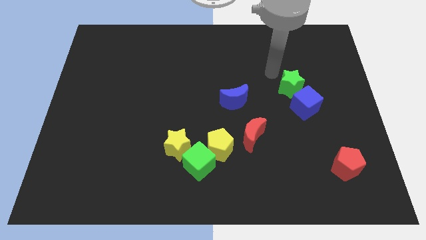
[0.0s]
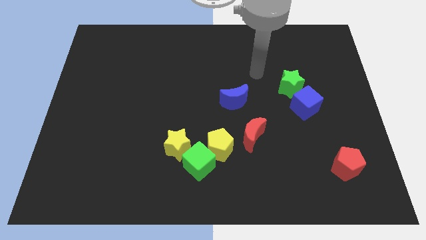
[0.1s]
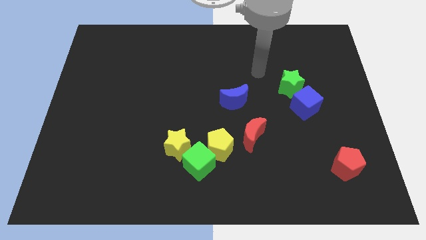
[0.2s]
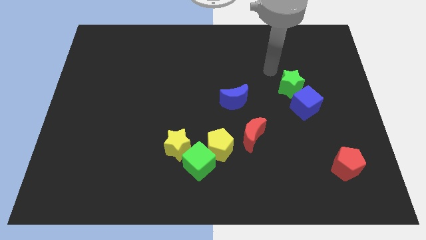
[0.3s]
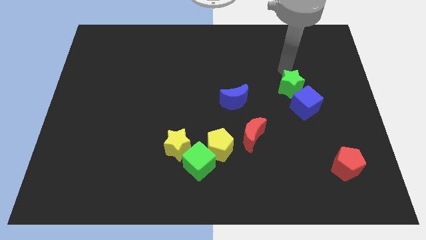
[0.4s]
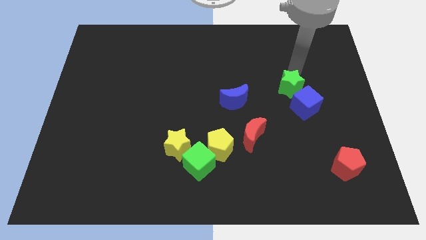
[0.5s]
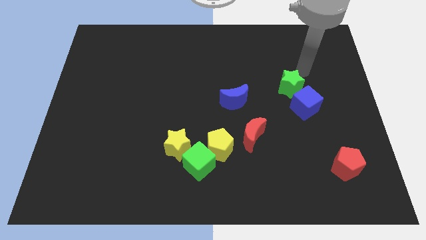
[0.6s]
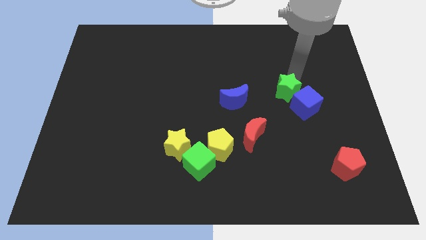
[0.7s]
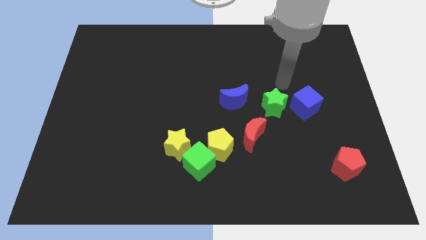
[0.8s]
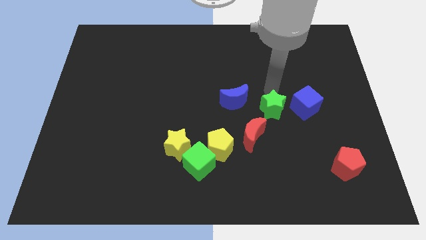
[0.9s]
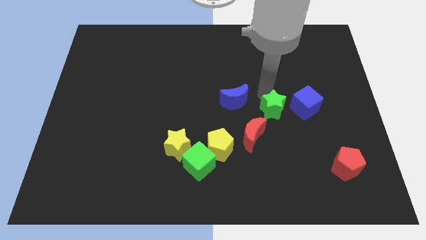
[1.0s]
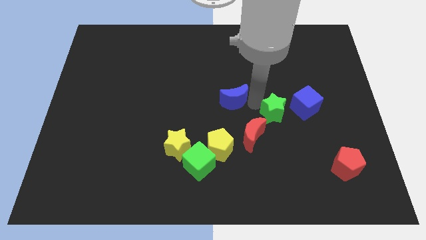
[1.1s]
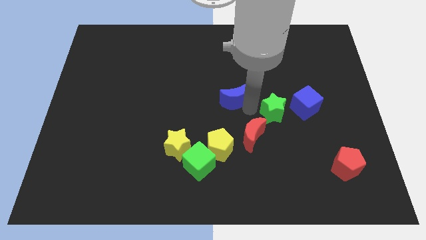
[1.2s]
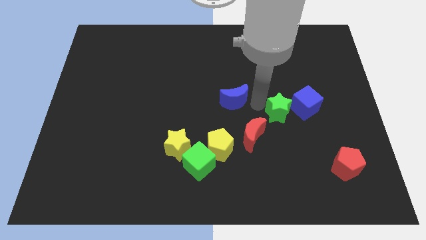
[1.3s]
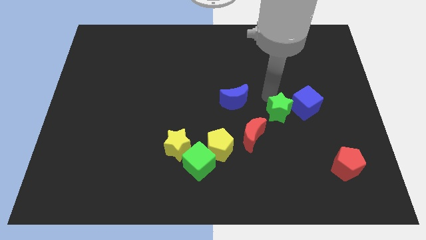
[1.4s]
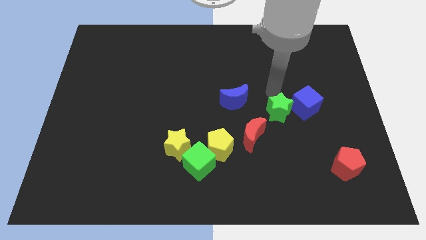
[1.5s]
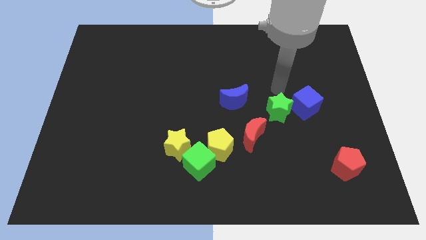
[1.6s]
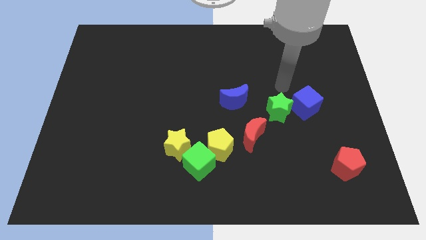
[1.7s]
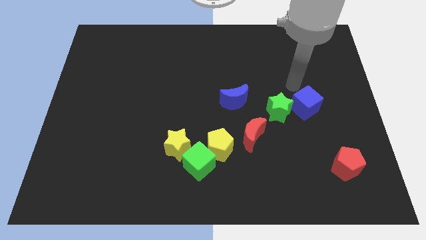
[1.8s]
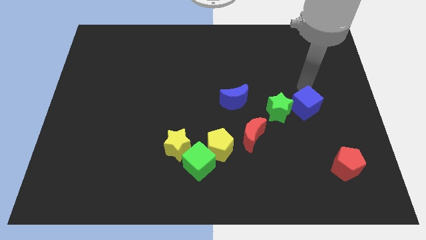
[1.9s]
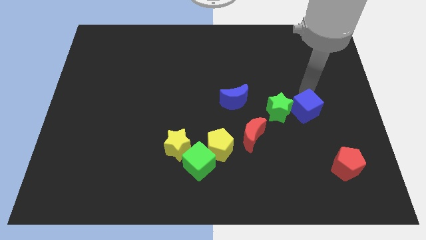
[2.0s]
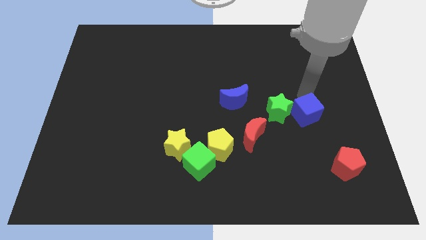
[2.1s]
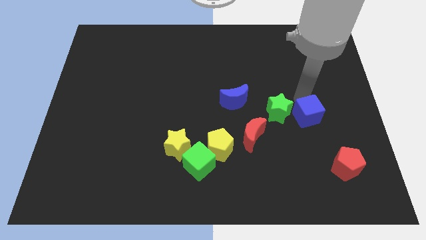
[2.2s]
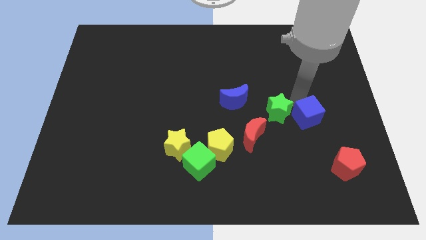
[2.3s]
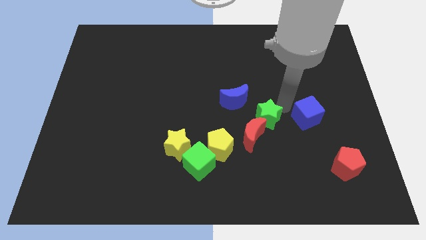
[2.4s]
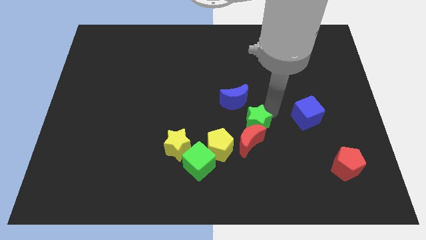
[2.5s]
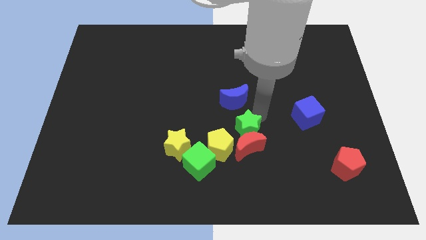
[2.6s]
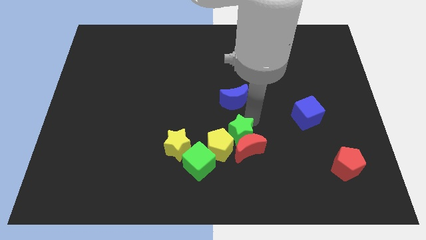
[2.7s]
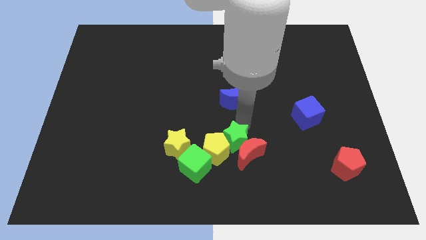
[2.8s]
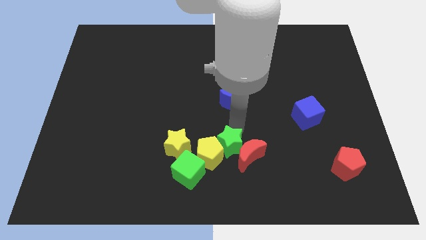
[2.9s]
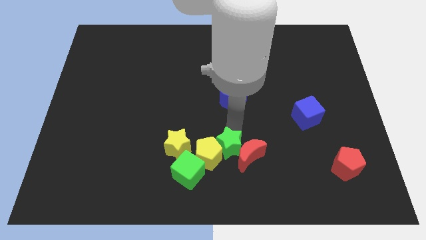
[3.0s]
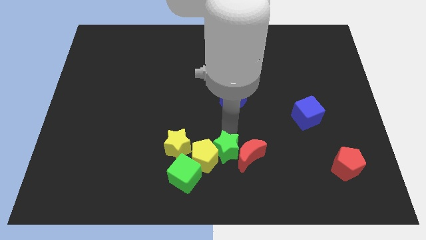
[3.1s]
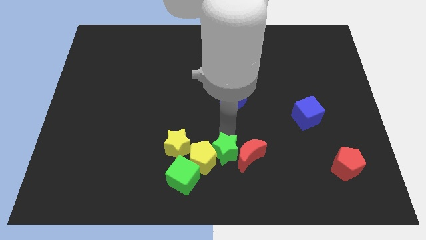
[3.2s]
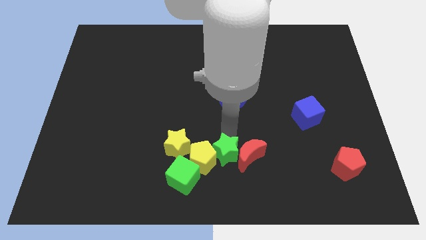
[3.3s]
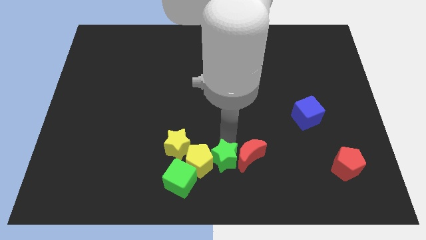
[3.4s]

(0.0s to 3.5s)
push green star into yellow pentagon

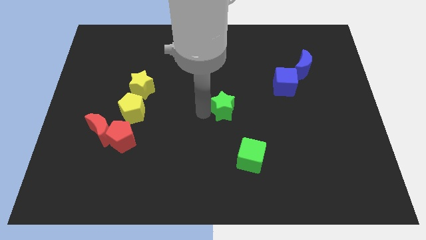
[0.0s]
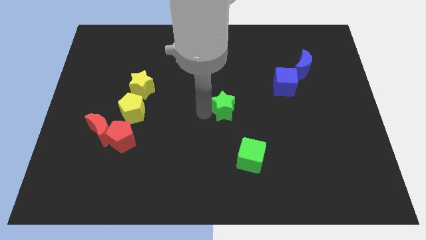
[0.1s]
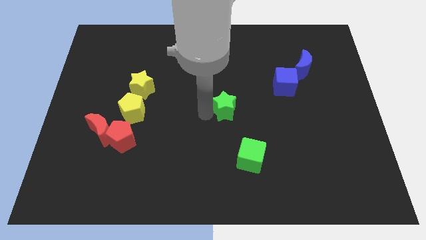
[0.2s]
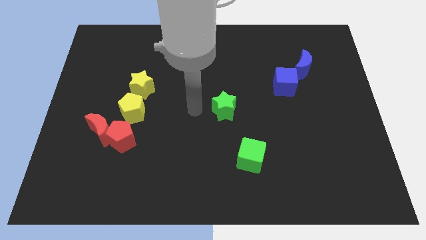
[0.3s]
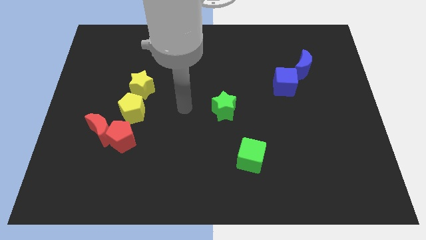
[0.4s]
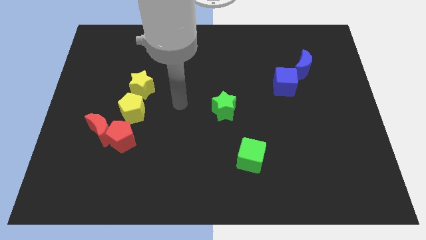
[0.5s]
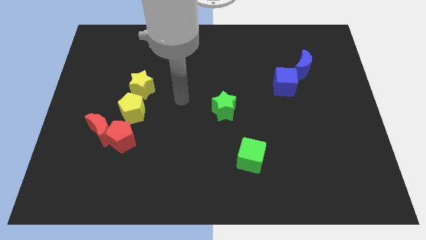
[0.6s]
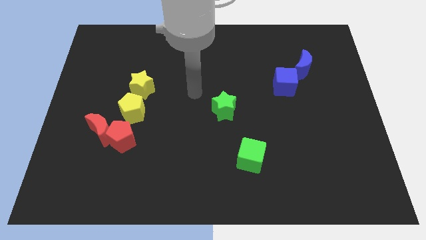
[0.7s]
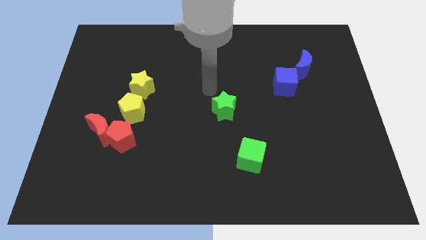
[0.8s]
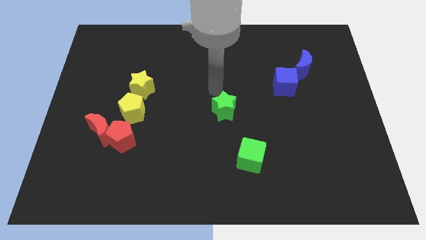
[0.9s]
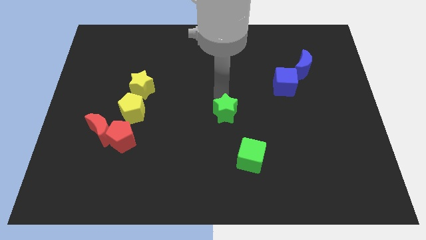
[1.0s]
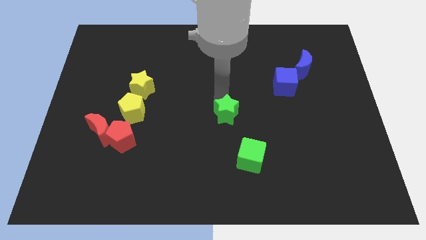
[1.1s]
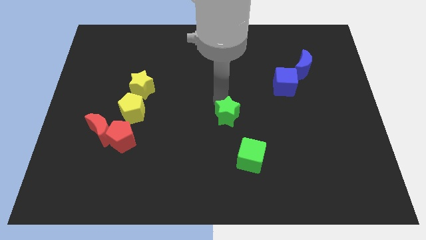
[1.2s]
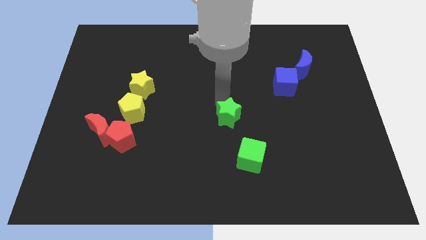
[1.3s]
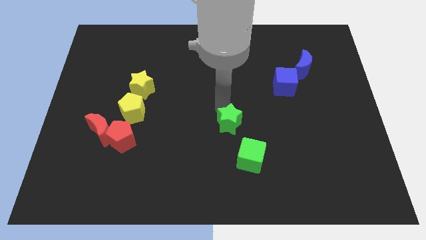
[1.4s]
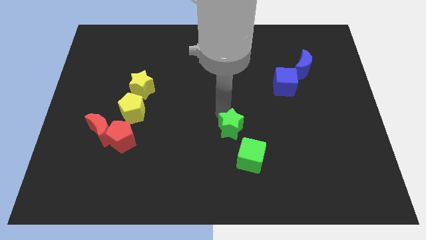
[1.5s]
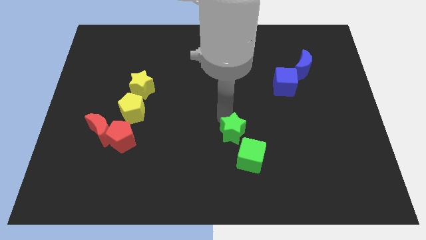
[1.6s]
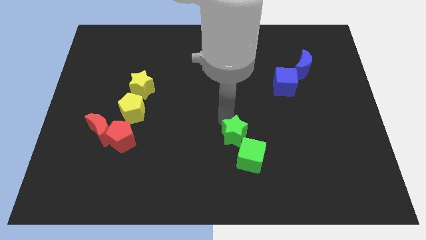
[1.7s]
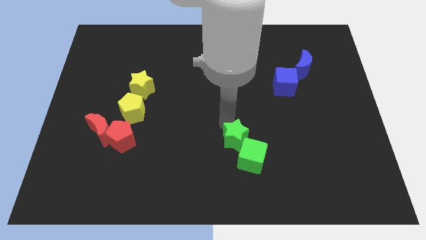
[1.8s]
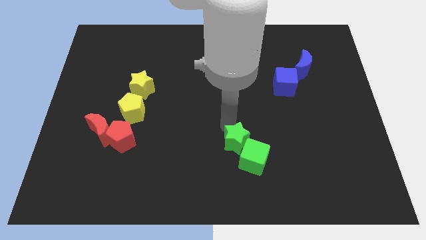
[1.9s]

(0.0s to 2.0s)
push the green star towards the green cube

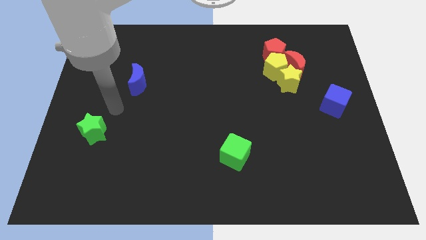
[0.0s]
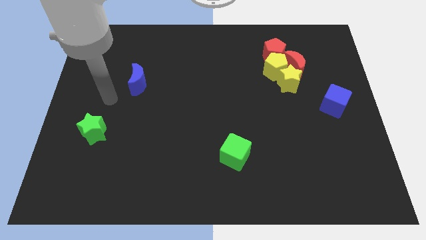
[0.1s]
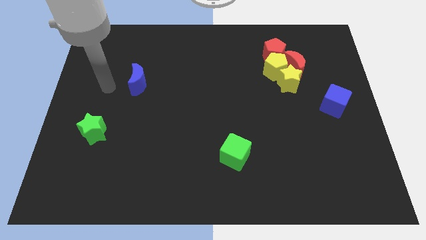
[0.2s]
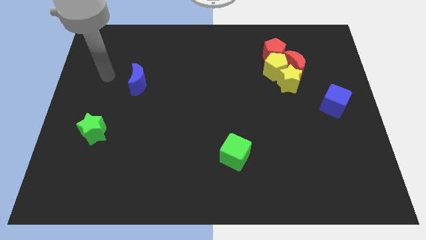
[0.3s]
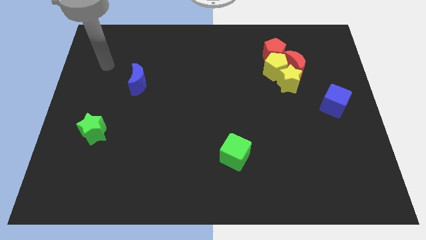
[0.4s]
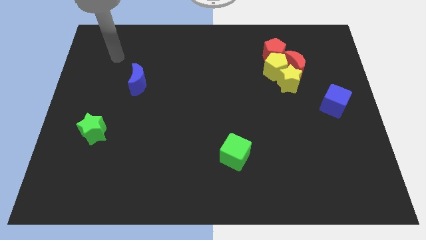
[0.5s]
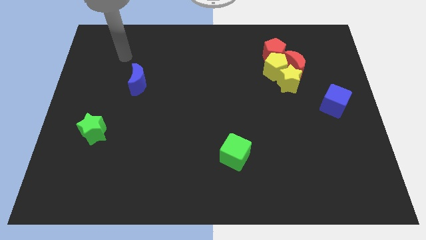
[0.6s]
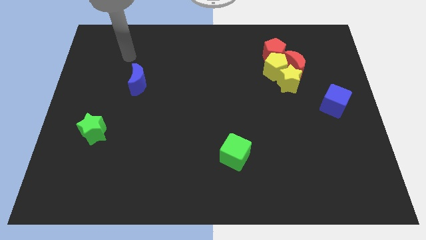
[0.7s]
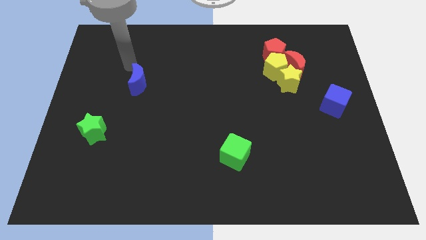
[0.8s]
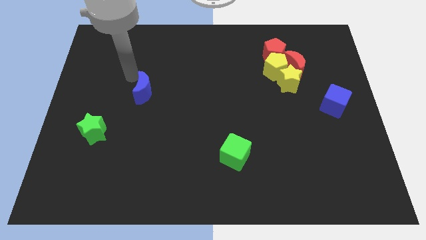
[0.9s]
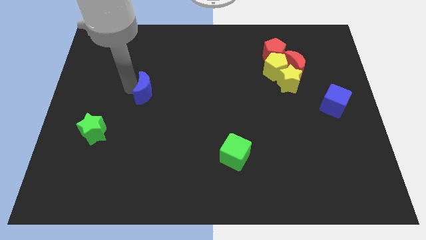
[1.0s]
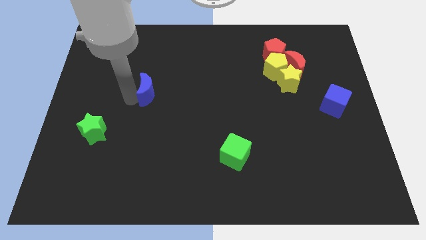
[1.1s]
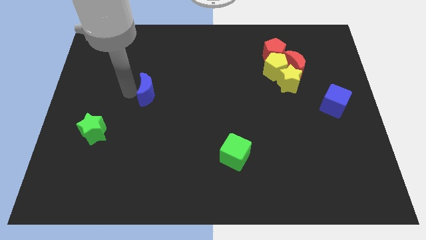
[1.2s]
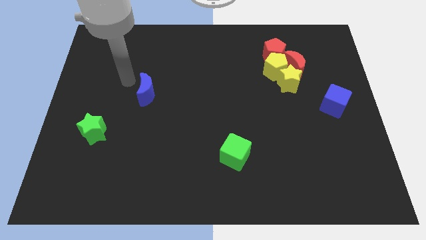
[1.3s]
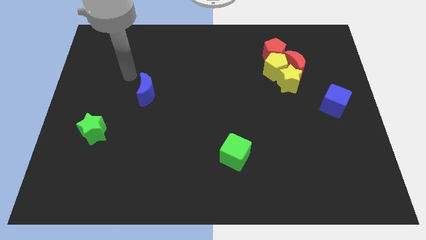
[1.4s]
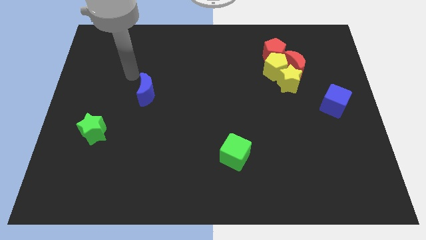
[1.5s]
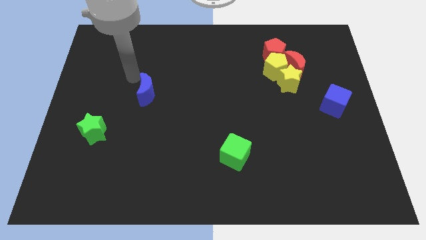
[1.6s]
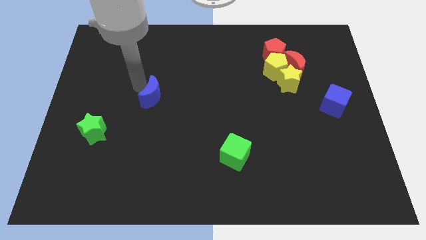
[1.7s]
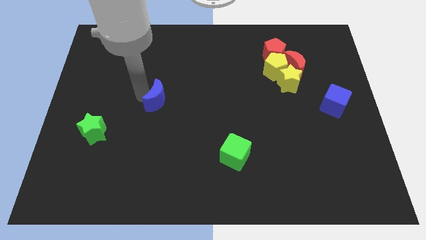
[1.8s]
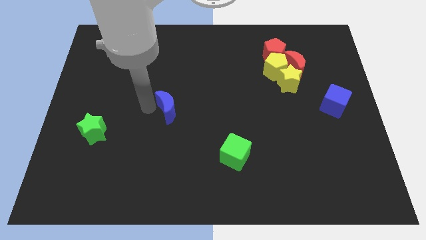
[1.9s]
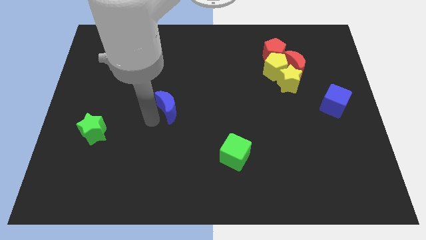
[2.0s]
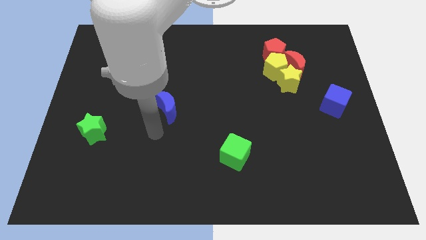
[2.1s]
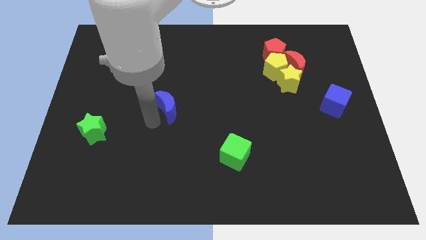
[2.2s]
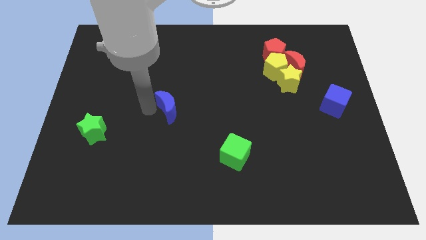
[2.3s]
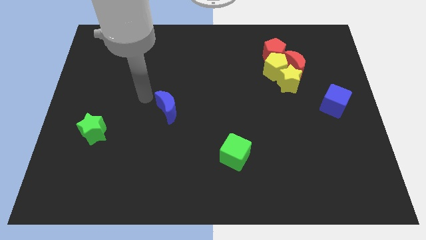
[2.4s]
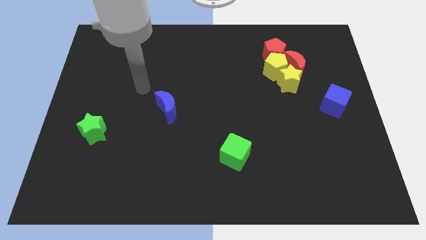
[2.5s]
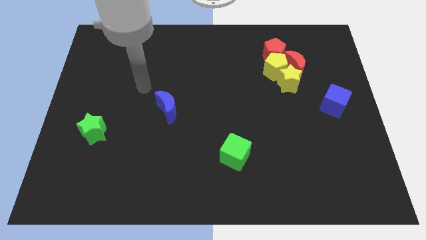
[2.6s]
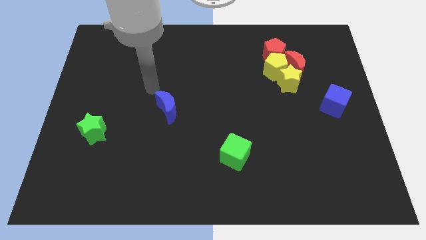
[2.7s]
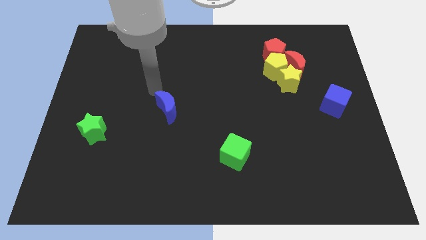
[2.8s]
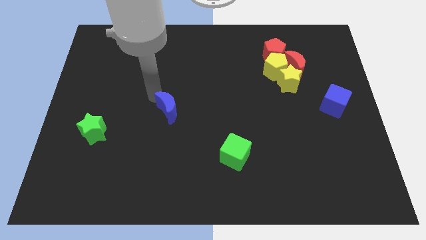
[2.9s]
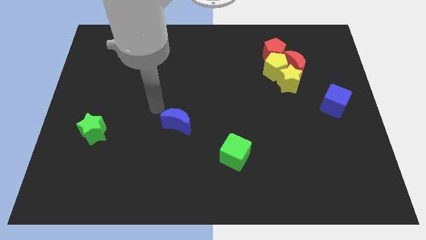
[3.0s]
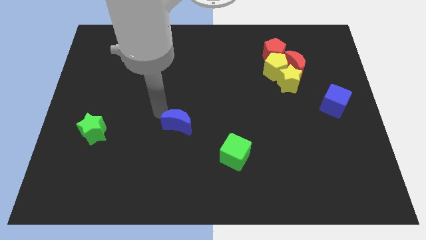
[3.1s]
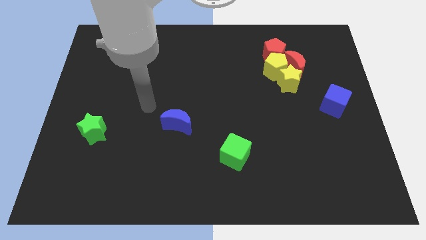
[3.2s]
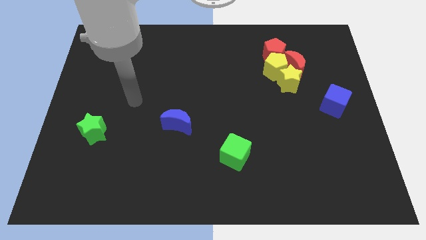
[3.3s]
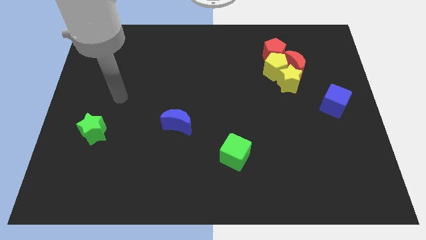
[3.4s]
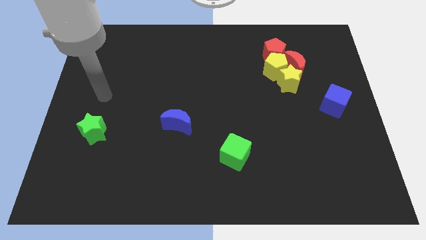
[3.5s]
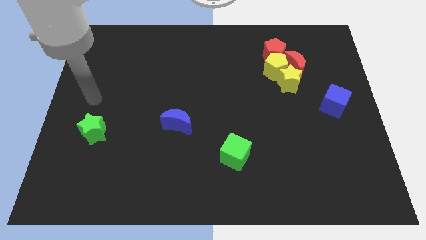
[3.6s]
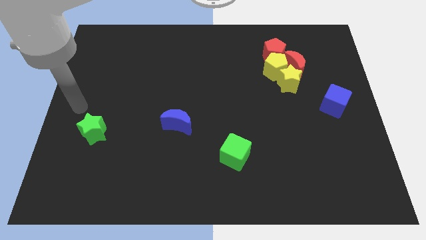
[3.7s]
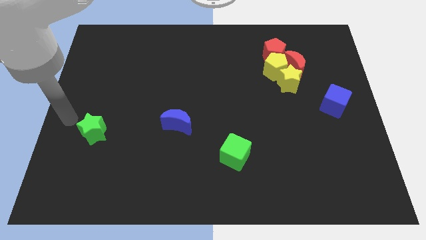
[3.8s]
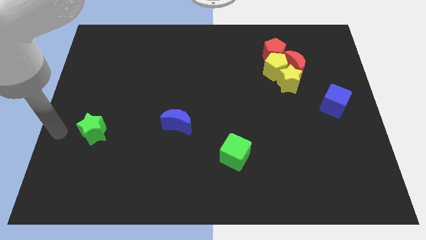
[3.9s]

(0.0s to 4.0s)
move the blue moon near to the green cube
